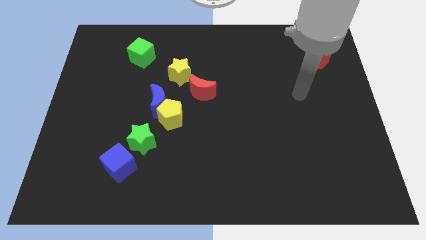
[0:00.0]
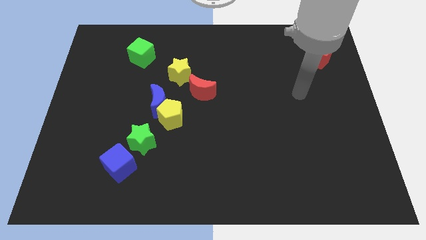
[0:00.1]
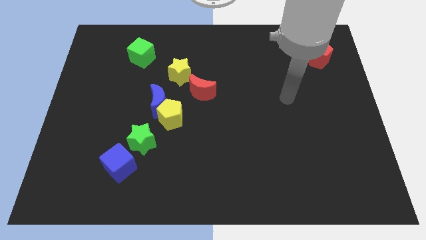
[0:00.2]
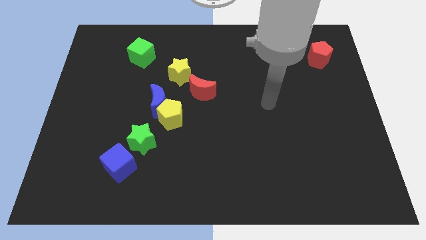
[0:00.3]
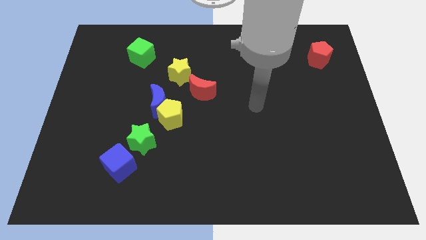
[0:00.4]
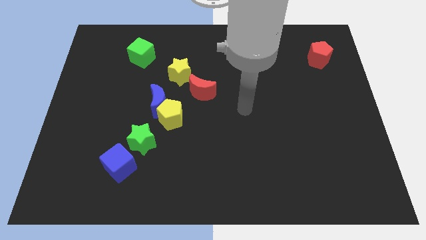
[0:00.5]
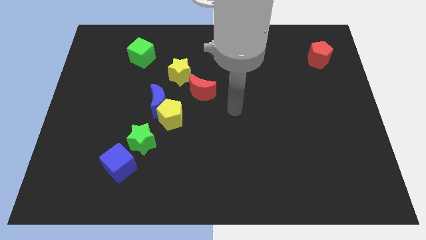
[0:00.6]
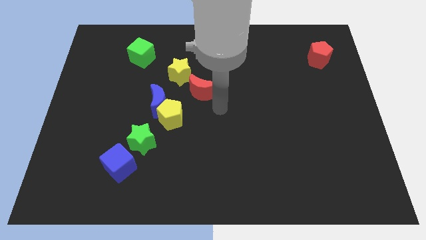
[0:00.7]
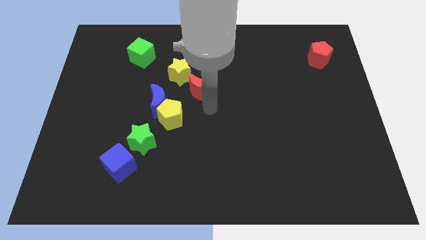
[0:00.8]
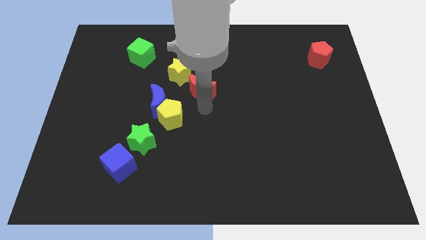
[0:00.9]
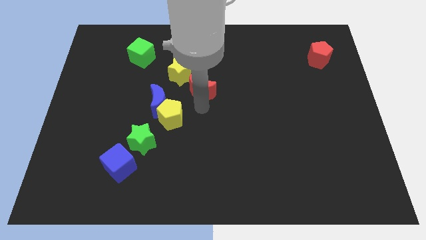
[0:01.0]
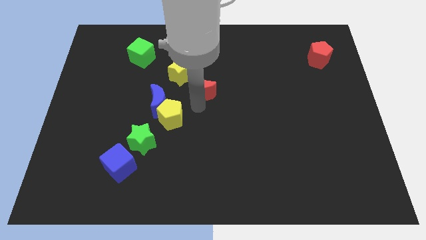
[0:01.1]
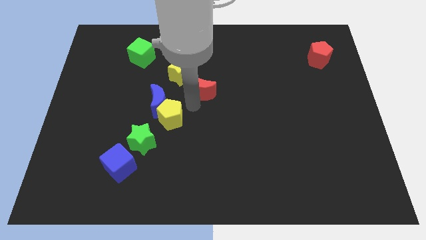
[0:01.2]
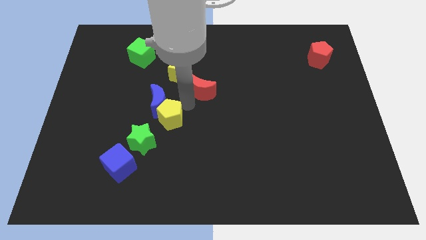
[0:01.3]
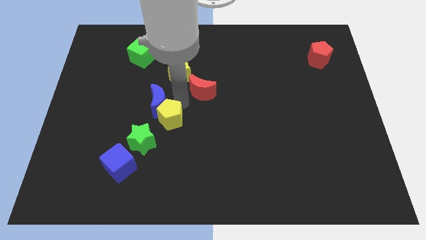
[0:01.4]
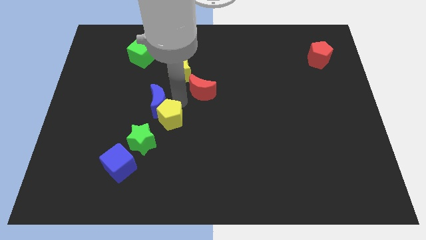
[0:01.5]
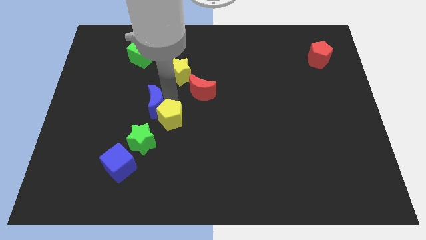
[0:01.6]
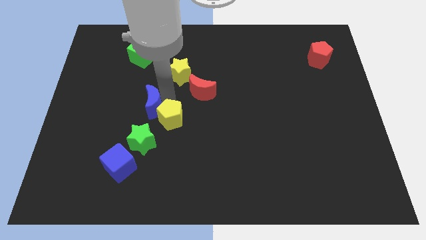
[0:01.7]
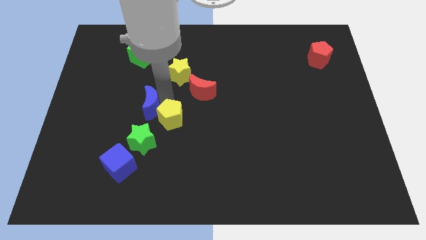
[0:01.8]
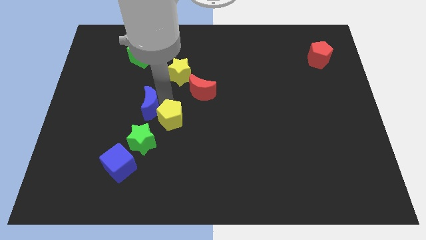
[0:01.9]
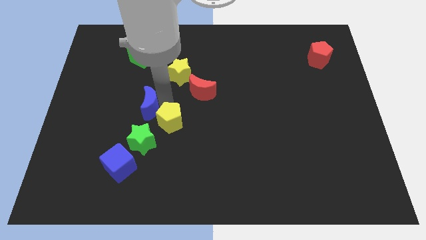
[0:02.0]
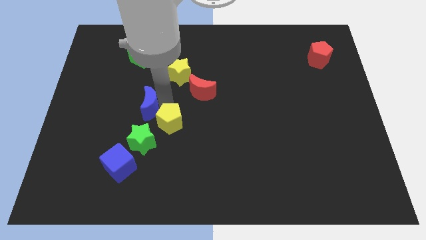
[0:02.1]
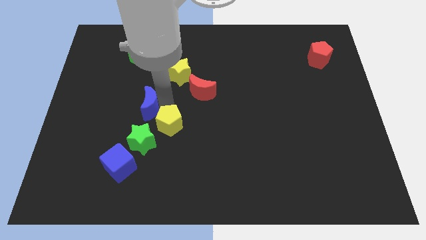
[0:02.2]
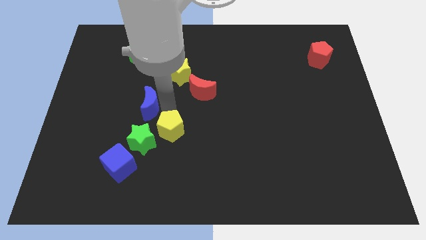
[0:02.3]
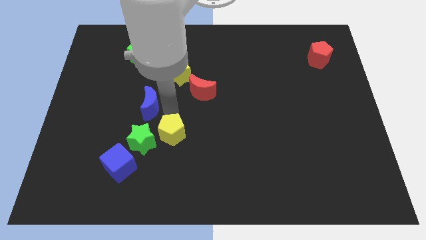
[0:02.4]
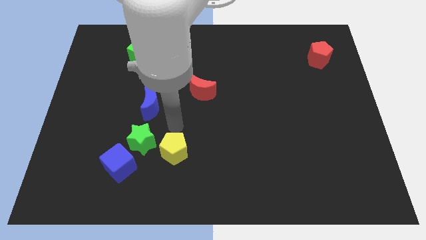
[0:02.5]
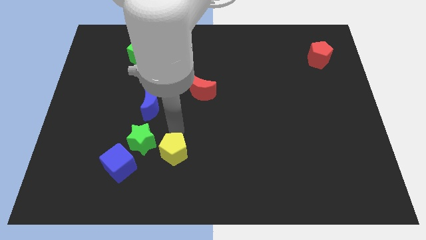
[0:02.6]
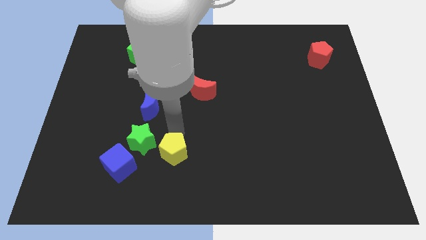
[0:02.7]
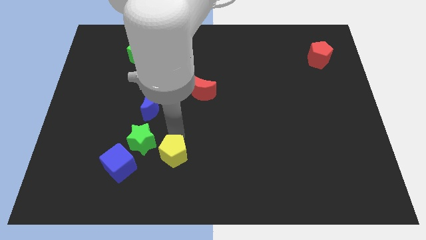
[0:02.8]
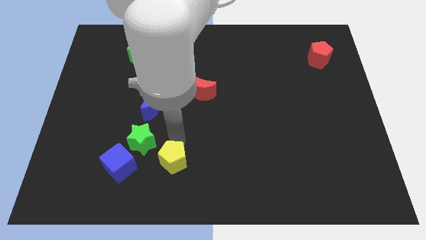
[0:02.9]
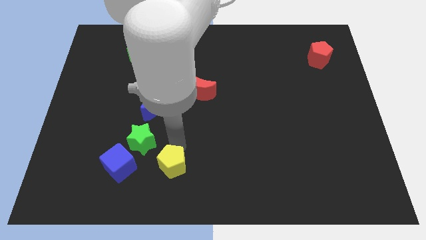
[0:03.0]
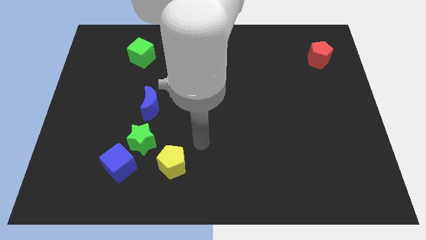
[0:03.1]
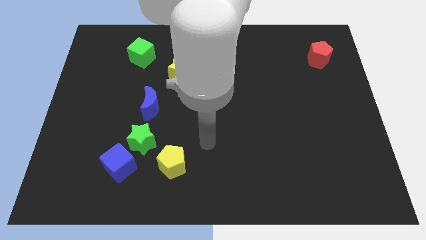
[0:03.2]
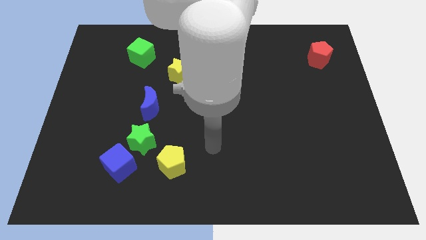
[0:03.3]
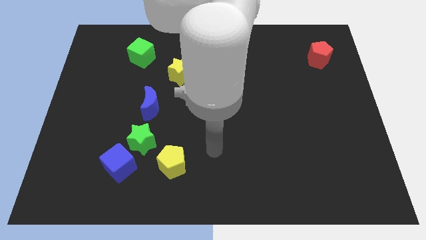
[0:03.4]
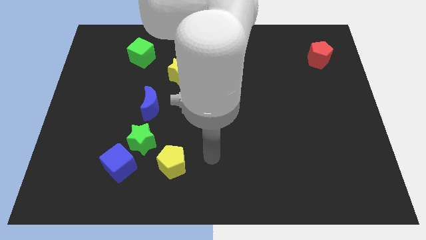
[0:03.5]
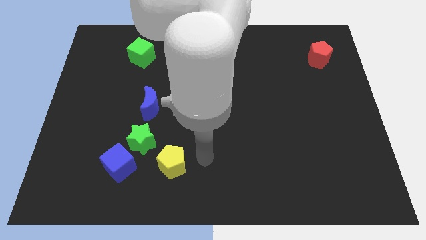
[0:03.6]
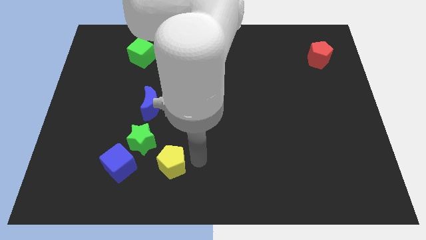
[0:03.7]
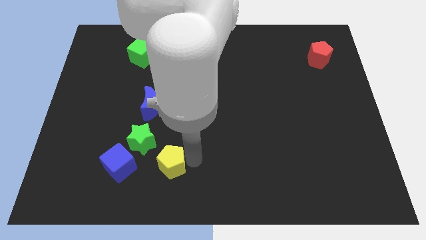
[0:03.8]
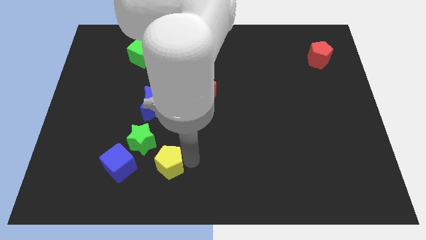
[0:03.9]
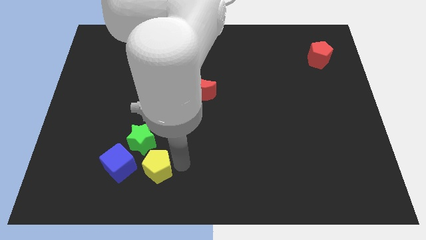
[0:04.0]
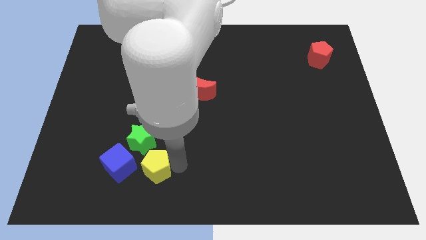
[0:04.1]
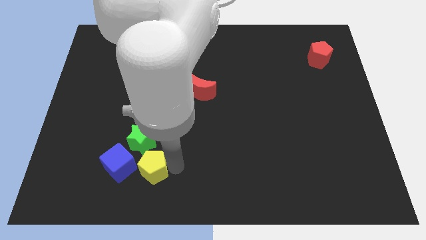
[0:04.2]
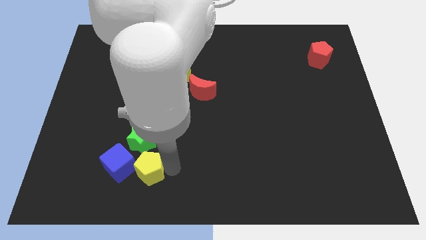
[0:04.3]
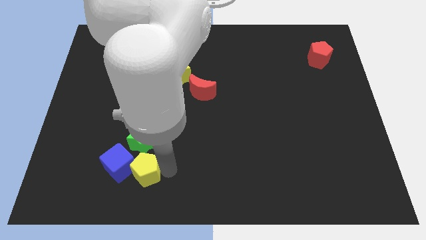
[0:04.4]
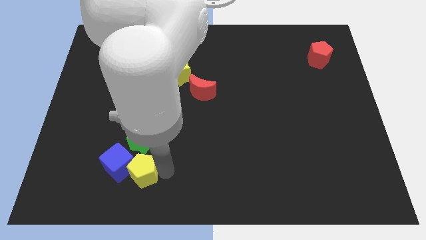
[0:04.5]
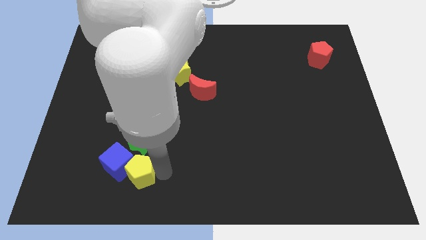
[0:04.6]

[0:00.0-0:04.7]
push the yellow pentagon to the blue cube

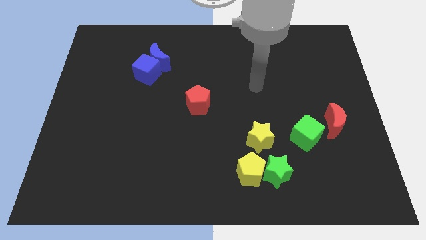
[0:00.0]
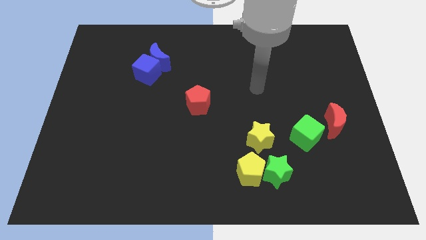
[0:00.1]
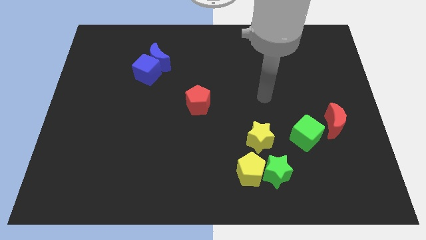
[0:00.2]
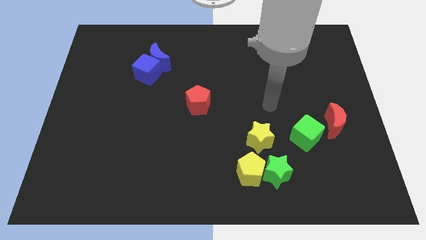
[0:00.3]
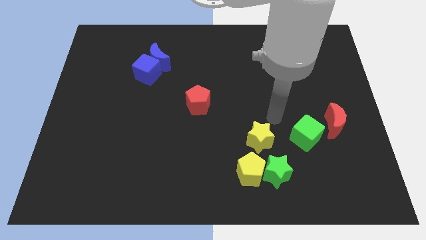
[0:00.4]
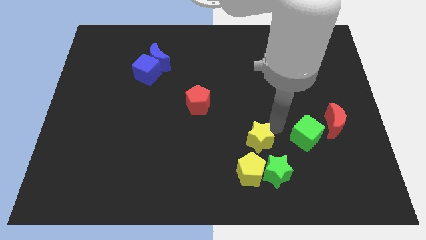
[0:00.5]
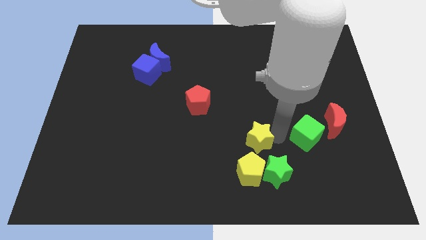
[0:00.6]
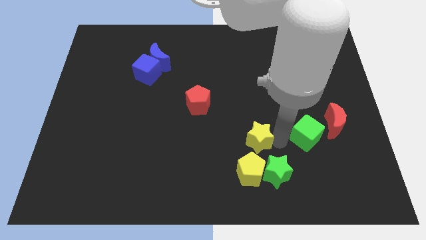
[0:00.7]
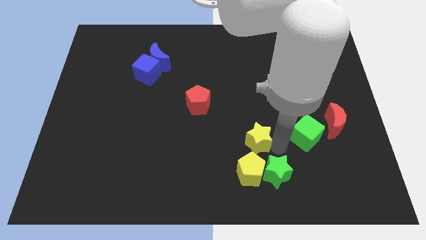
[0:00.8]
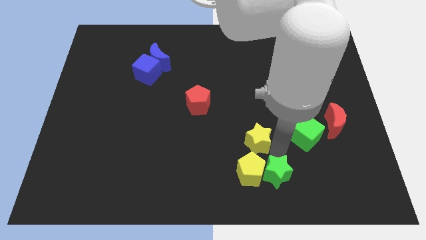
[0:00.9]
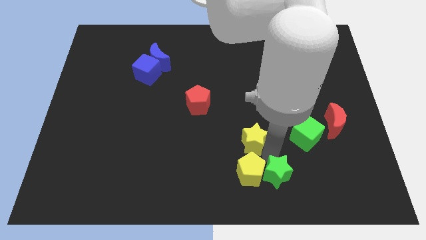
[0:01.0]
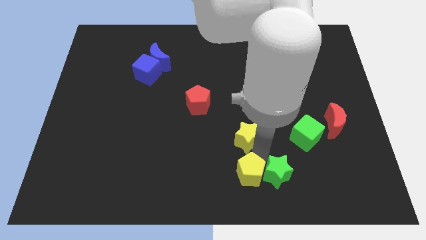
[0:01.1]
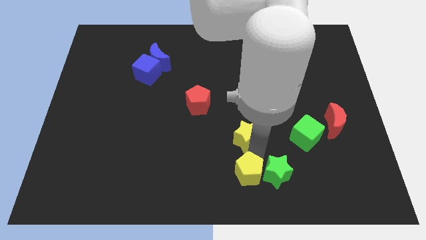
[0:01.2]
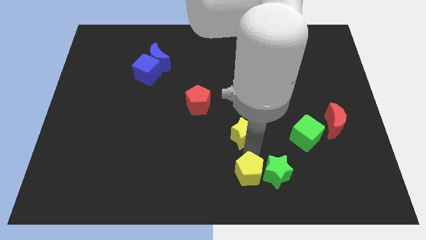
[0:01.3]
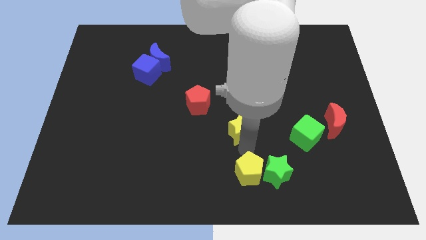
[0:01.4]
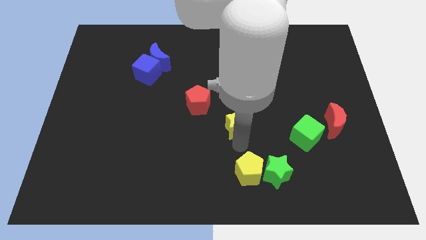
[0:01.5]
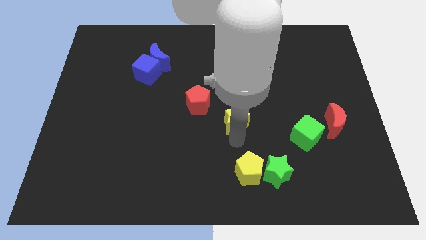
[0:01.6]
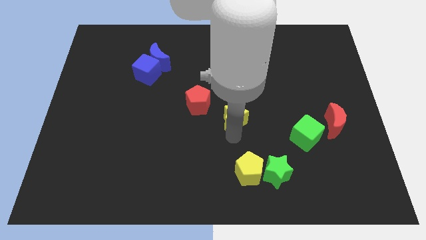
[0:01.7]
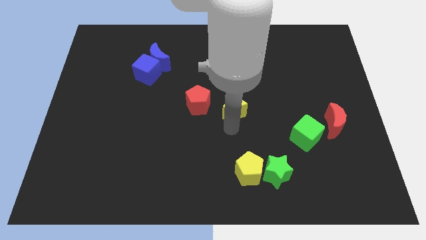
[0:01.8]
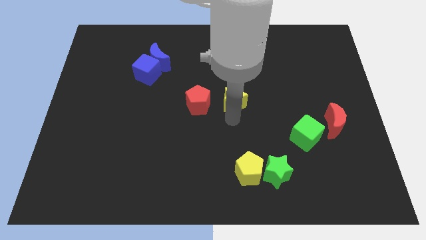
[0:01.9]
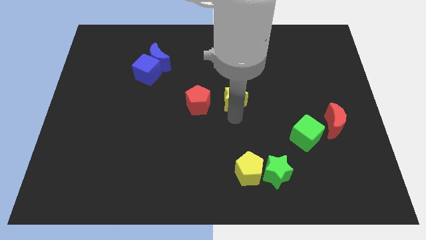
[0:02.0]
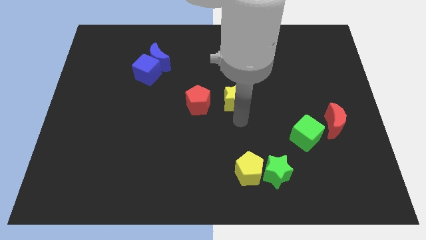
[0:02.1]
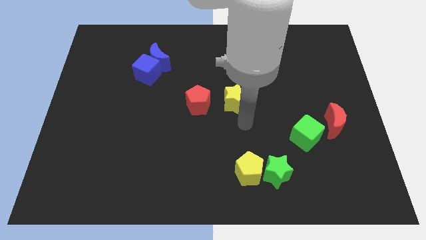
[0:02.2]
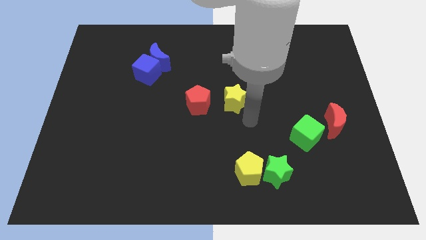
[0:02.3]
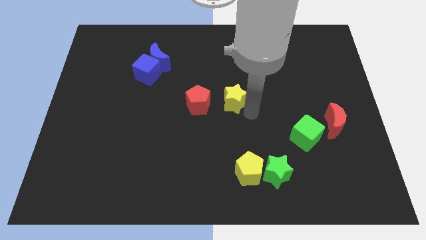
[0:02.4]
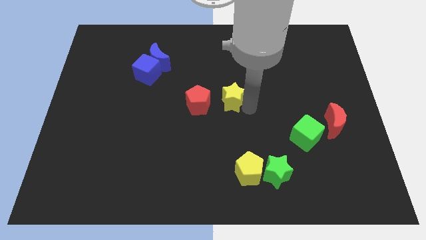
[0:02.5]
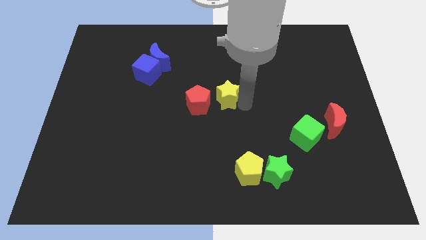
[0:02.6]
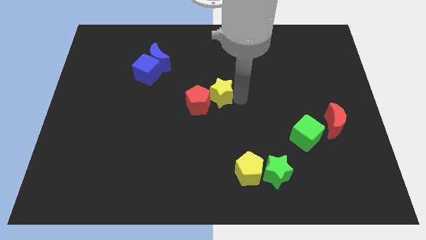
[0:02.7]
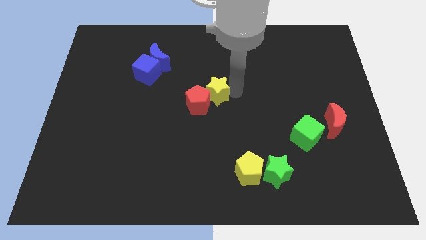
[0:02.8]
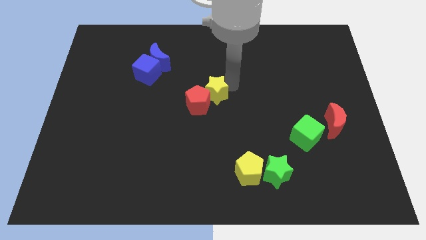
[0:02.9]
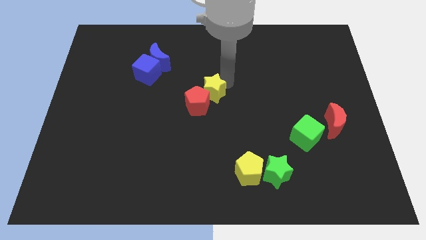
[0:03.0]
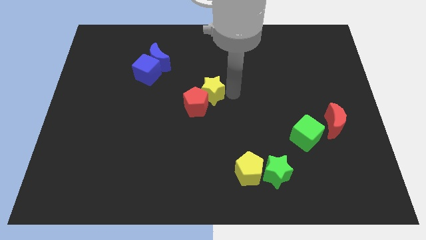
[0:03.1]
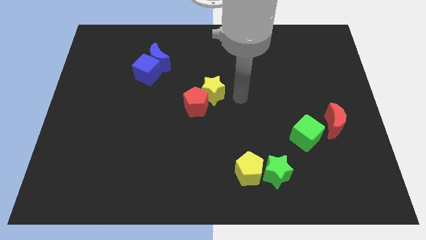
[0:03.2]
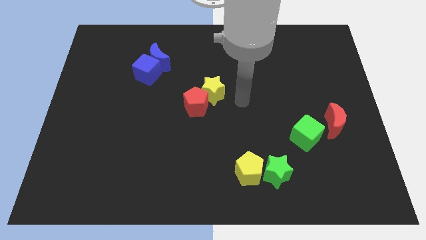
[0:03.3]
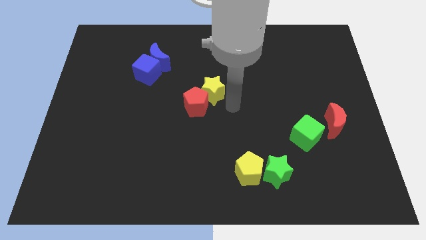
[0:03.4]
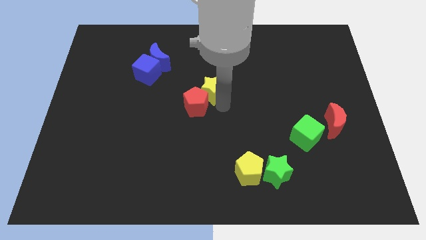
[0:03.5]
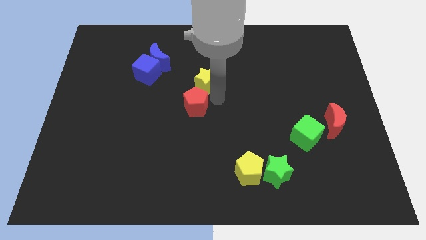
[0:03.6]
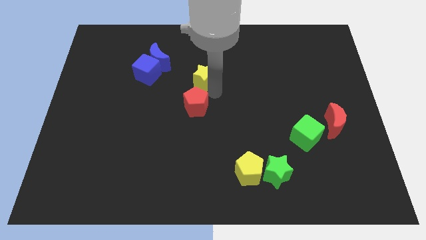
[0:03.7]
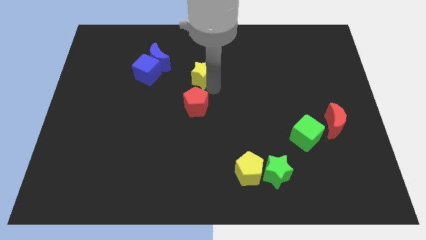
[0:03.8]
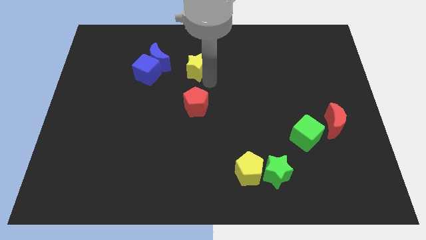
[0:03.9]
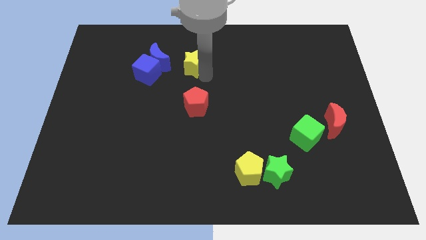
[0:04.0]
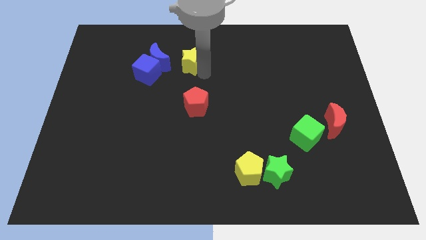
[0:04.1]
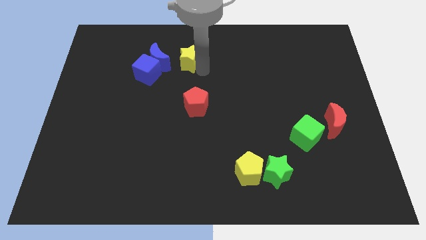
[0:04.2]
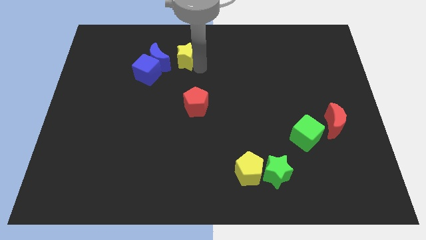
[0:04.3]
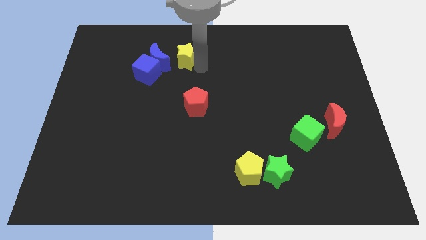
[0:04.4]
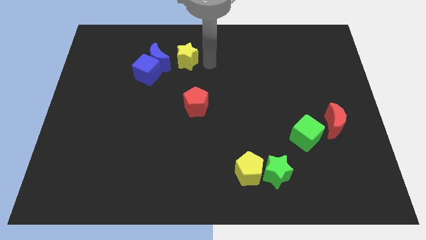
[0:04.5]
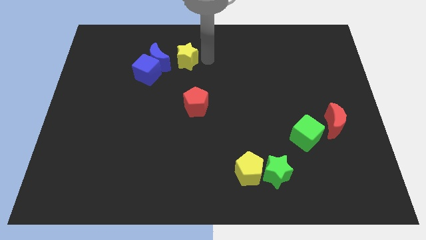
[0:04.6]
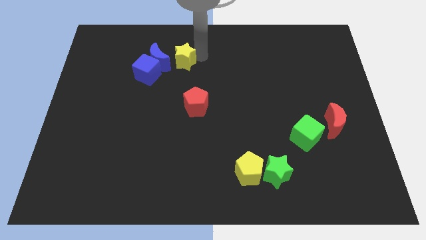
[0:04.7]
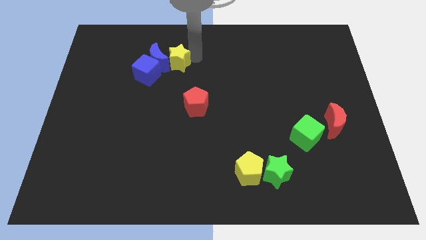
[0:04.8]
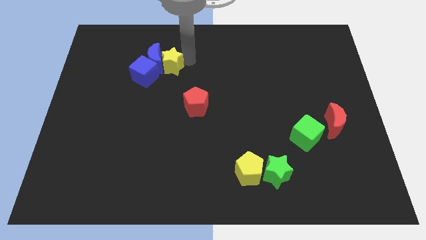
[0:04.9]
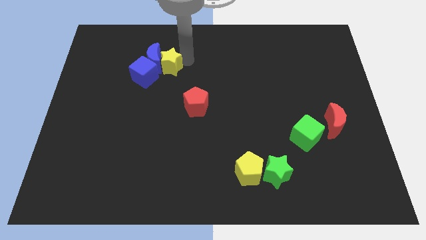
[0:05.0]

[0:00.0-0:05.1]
slide the yellow star next to the blue moon
